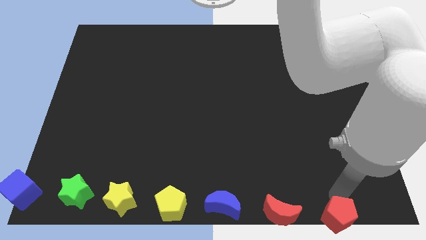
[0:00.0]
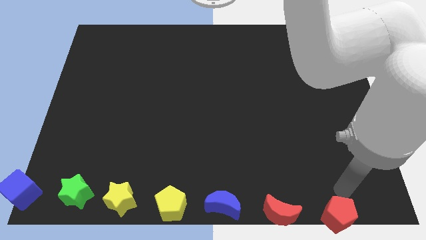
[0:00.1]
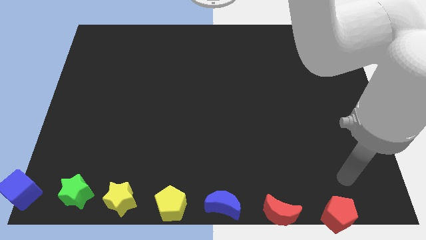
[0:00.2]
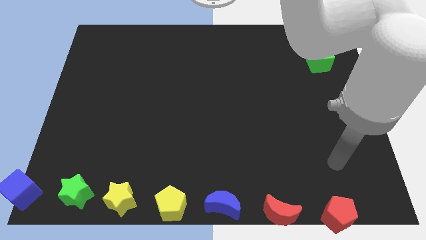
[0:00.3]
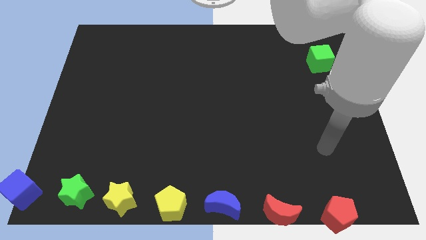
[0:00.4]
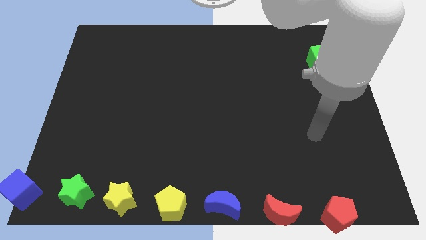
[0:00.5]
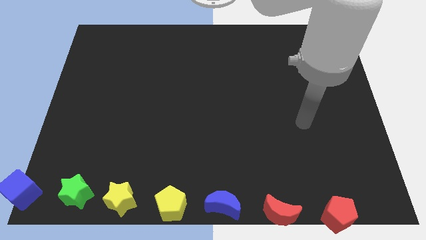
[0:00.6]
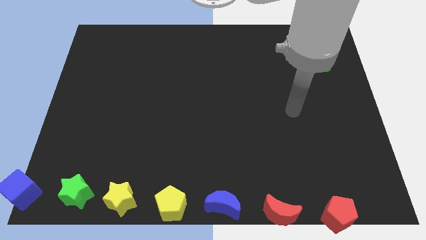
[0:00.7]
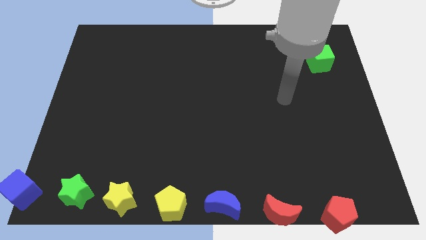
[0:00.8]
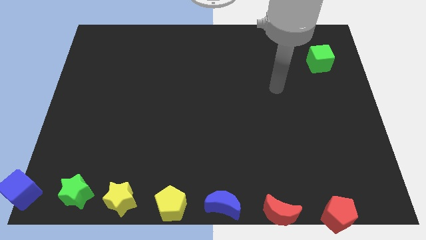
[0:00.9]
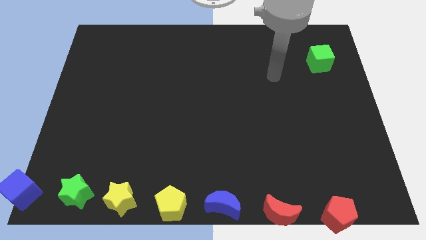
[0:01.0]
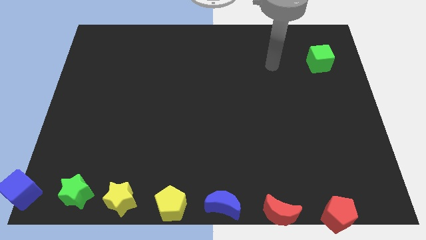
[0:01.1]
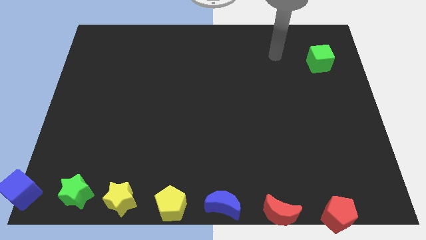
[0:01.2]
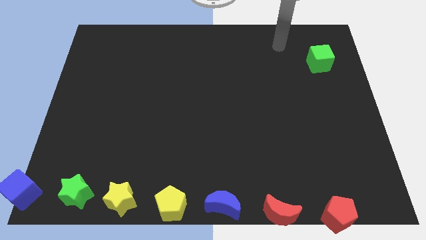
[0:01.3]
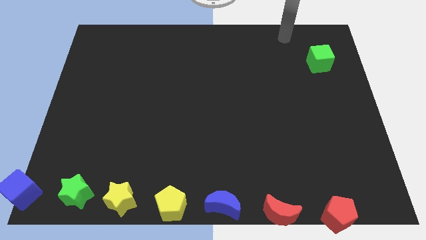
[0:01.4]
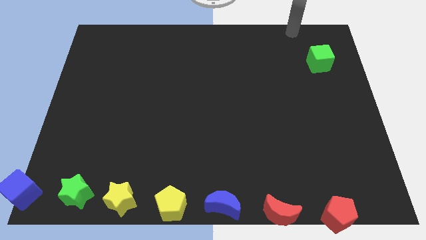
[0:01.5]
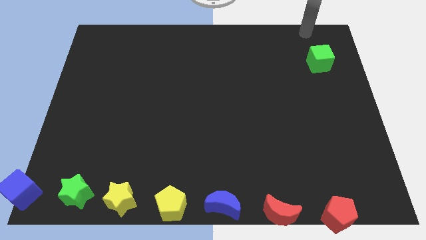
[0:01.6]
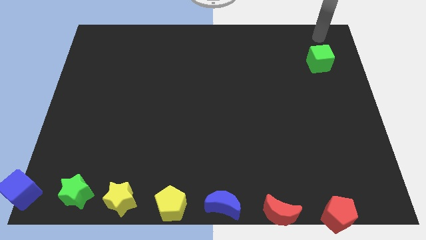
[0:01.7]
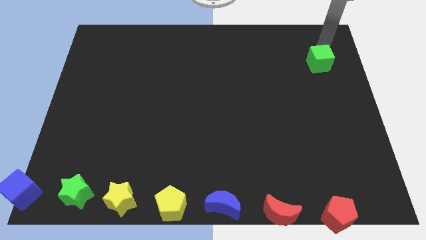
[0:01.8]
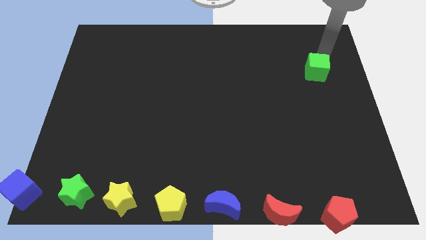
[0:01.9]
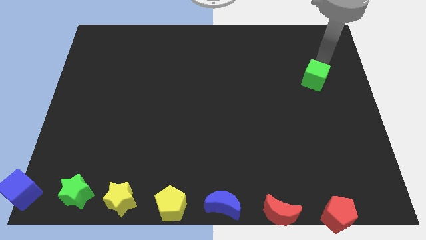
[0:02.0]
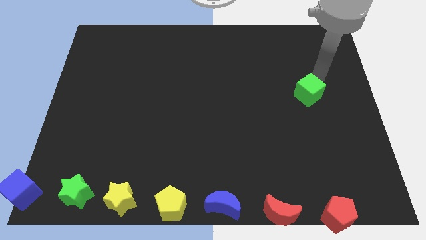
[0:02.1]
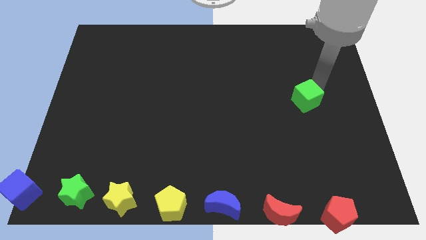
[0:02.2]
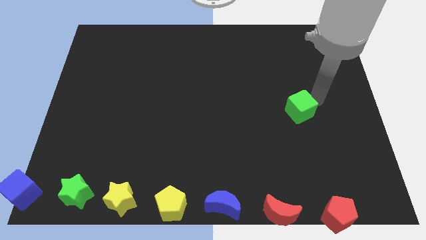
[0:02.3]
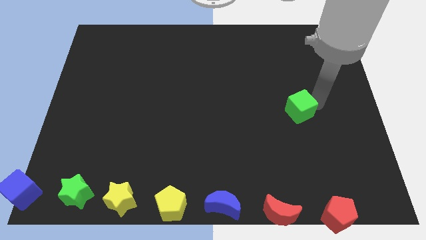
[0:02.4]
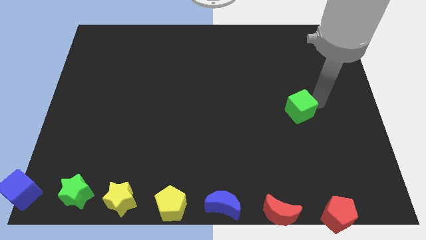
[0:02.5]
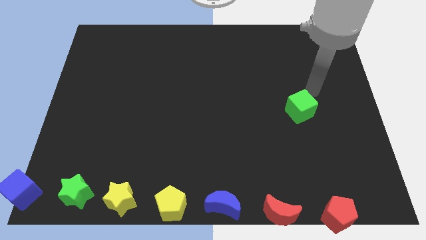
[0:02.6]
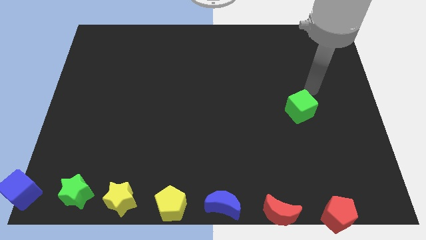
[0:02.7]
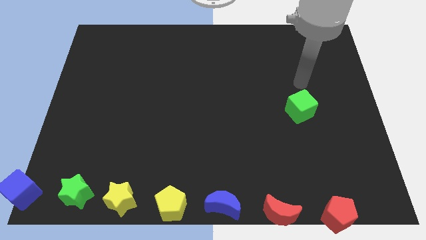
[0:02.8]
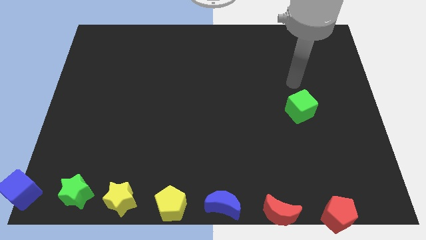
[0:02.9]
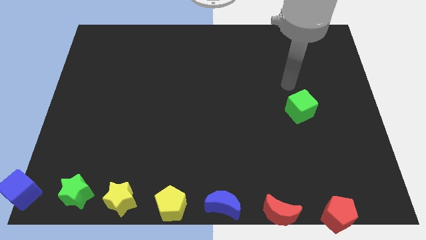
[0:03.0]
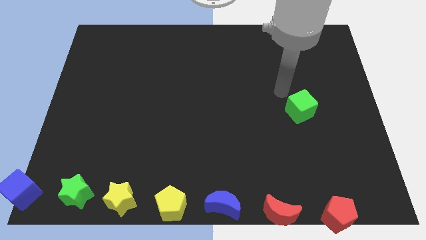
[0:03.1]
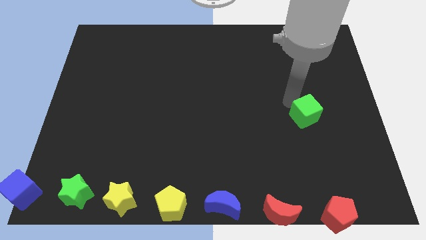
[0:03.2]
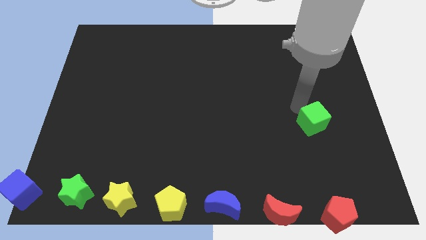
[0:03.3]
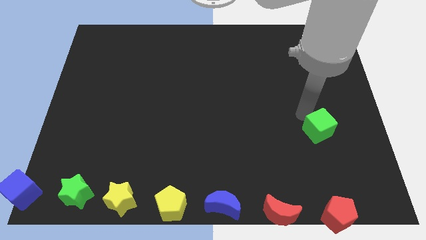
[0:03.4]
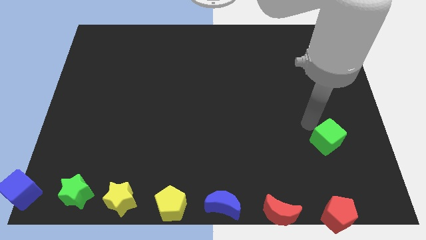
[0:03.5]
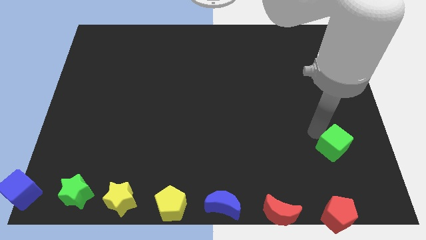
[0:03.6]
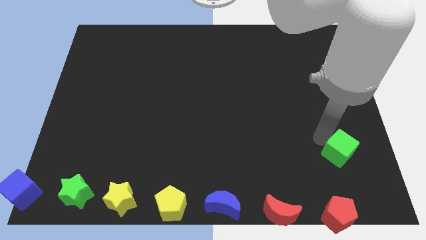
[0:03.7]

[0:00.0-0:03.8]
move the green cube above the top side of the red pentagon

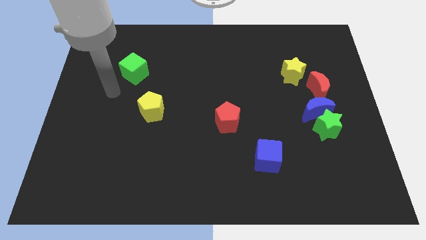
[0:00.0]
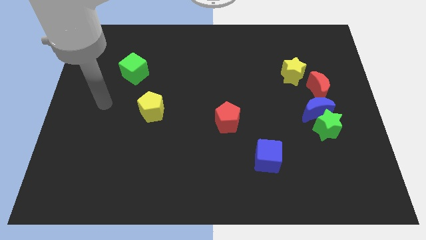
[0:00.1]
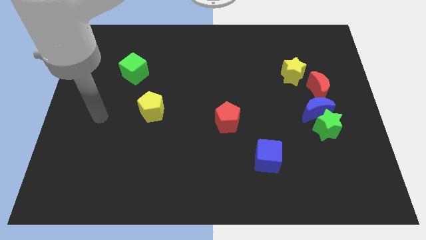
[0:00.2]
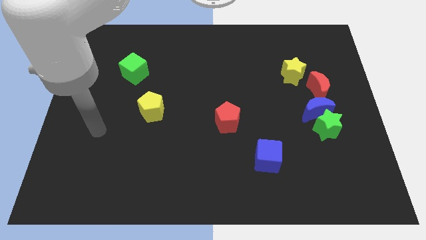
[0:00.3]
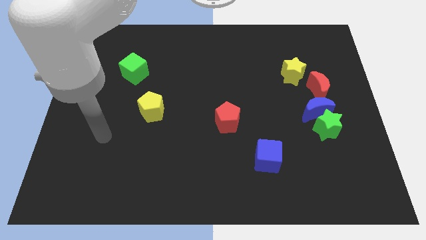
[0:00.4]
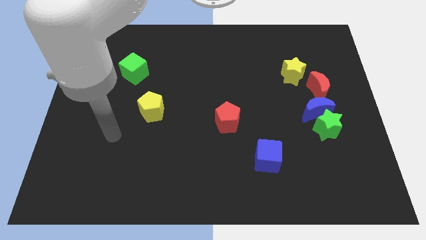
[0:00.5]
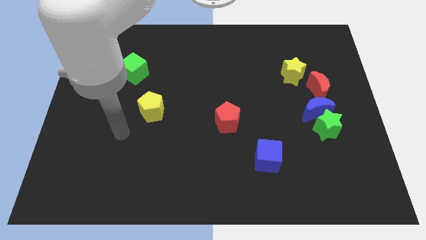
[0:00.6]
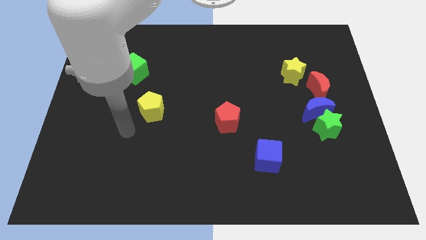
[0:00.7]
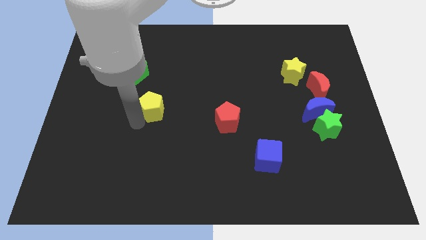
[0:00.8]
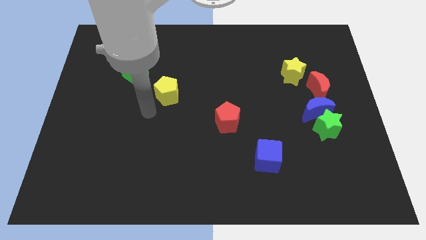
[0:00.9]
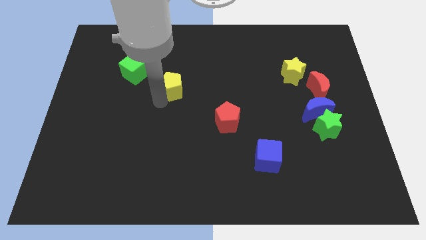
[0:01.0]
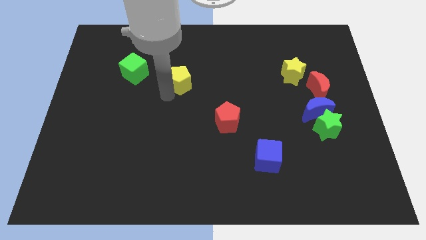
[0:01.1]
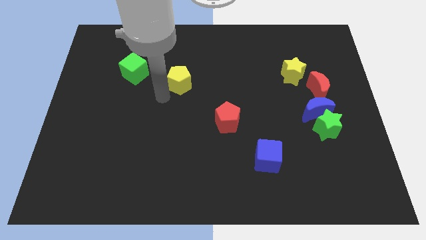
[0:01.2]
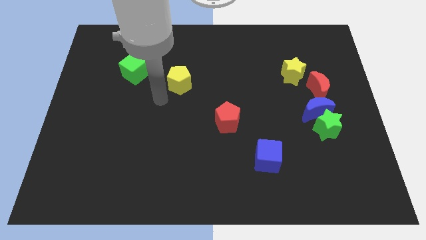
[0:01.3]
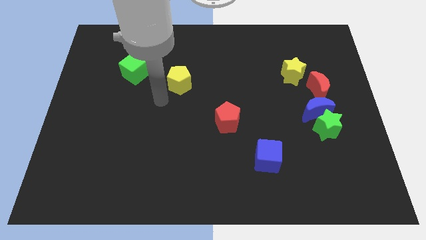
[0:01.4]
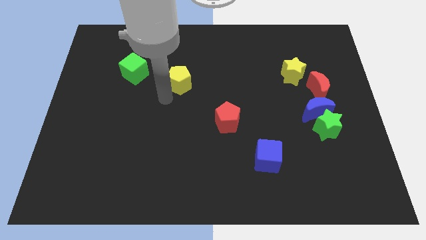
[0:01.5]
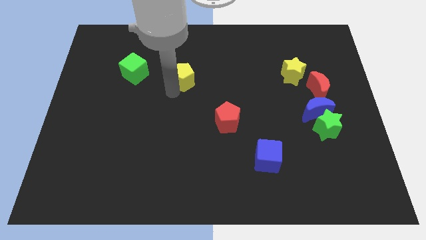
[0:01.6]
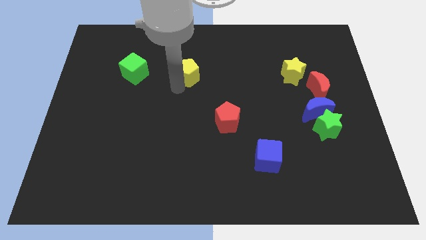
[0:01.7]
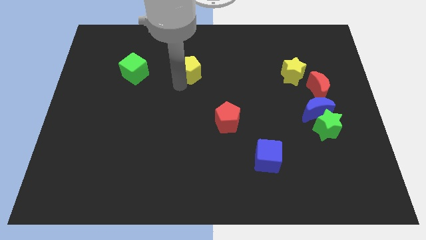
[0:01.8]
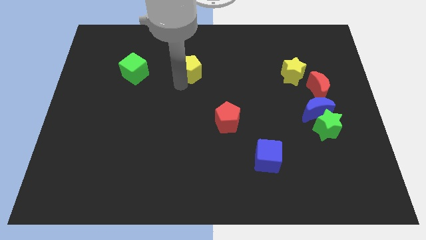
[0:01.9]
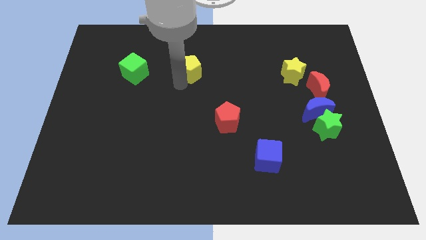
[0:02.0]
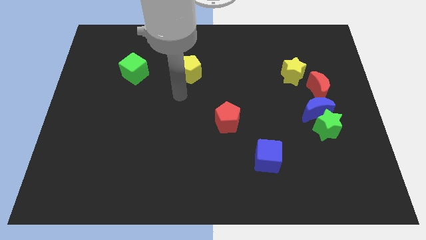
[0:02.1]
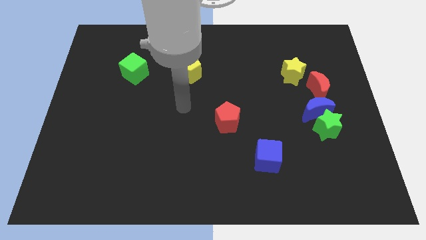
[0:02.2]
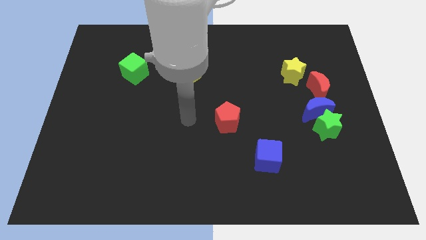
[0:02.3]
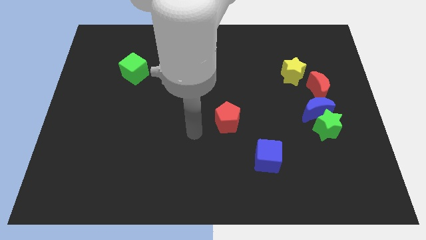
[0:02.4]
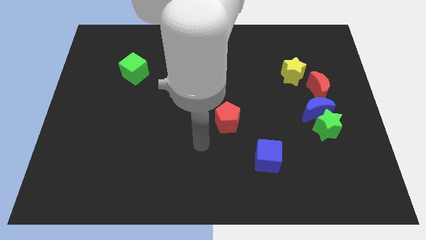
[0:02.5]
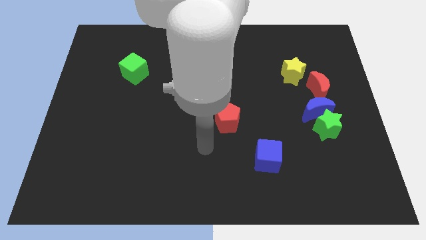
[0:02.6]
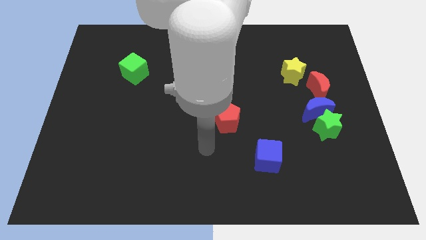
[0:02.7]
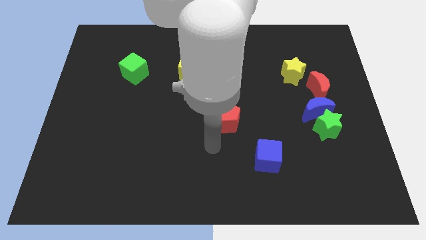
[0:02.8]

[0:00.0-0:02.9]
move the yellow pentagon parallel to the left side of the green cube

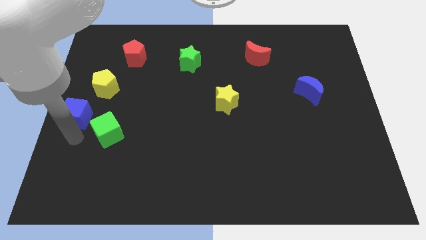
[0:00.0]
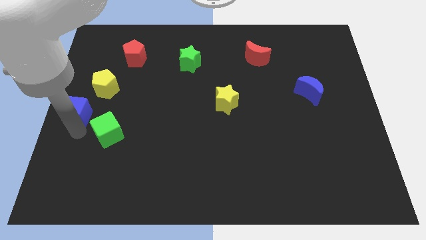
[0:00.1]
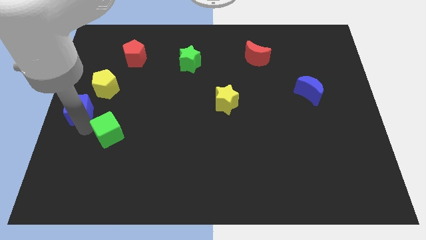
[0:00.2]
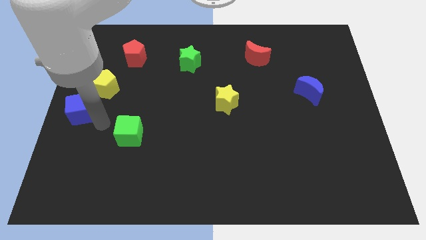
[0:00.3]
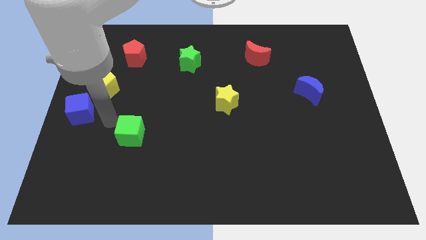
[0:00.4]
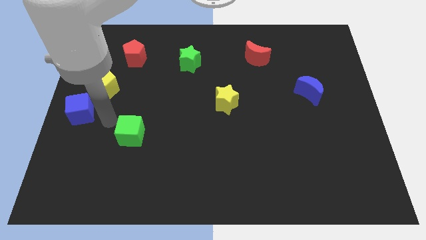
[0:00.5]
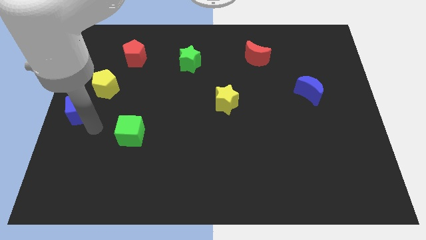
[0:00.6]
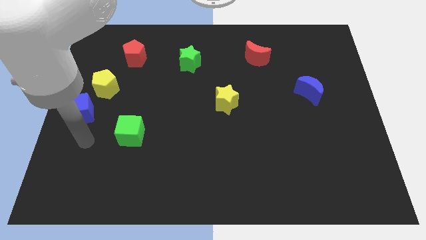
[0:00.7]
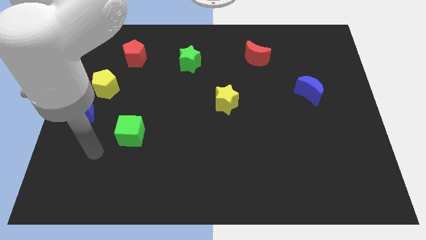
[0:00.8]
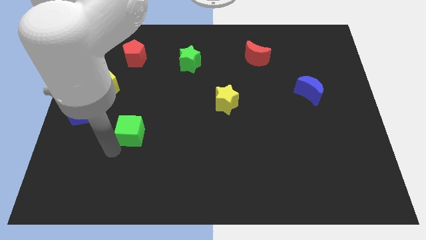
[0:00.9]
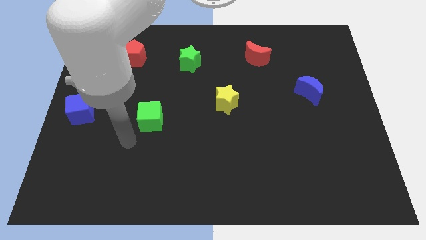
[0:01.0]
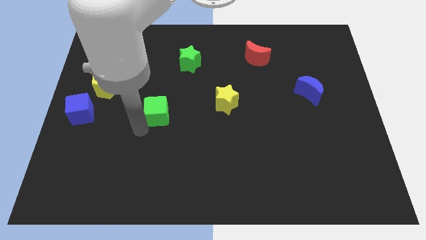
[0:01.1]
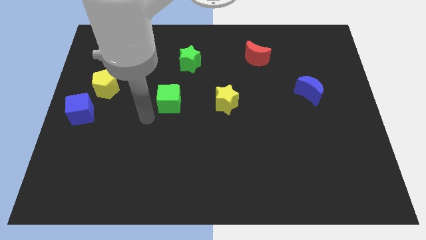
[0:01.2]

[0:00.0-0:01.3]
place green cube in between yellow blocks

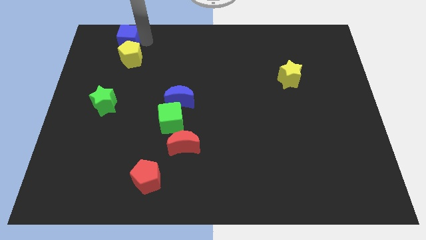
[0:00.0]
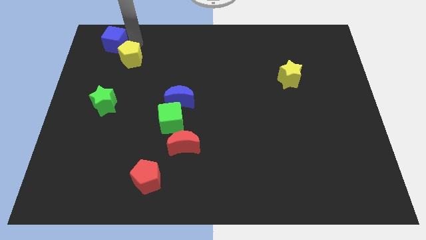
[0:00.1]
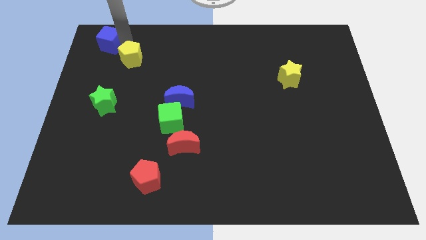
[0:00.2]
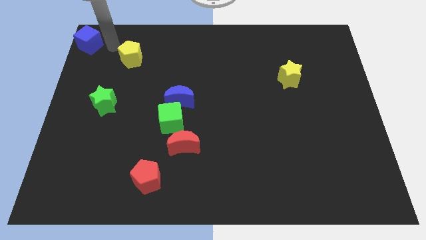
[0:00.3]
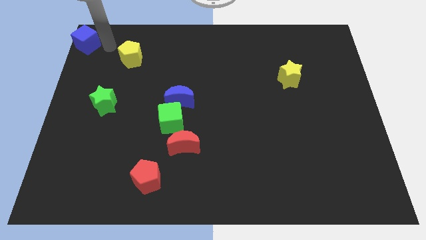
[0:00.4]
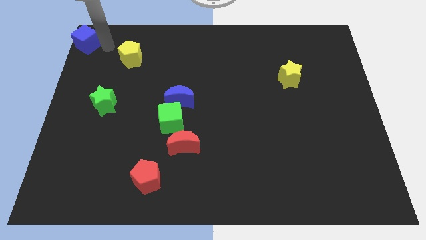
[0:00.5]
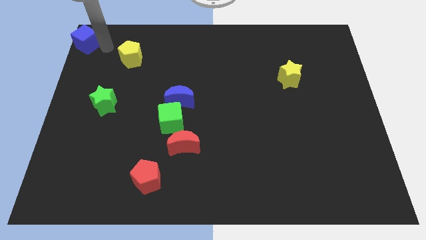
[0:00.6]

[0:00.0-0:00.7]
place the blue cube at top left corner of the board

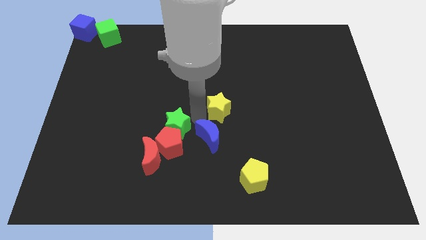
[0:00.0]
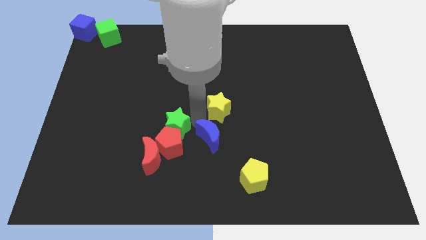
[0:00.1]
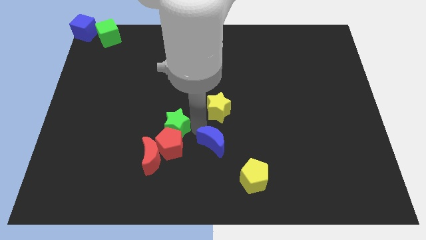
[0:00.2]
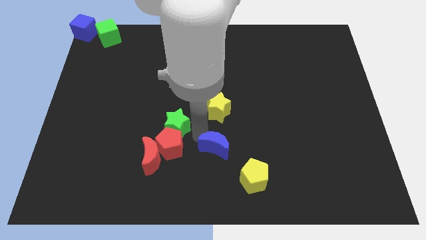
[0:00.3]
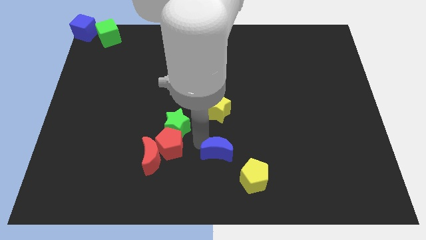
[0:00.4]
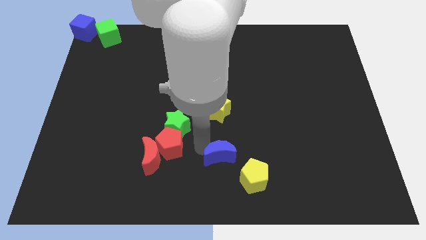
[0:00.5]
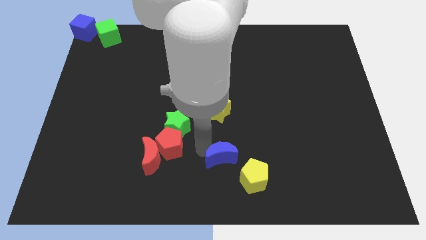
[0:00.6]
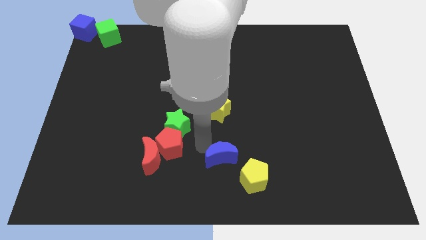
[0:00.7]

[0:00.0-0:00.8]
push blue moon slightly downwards
